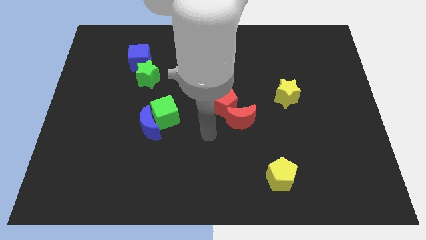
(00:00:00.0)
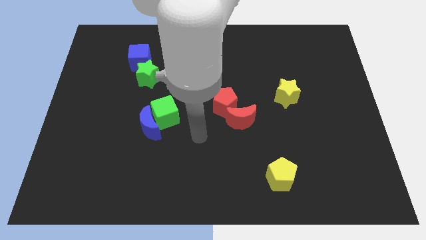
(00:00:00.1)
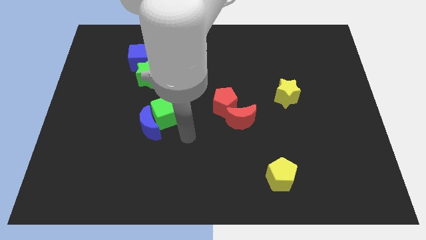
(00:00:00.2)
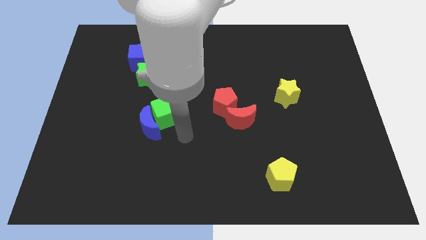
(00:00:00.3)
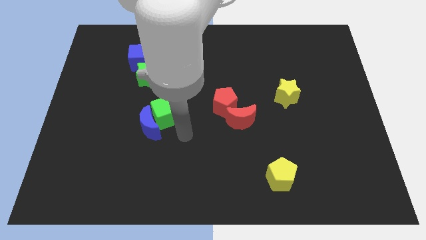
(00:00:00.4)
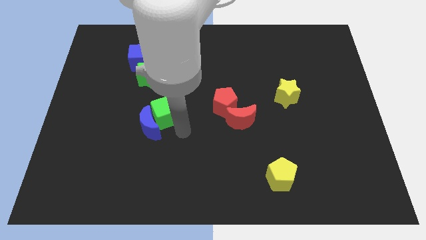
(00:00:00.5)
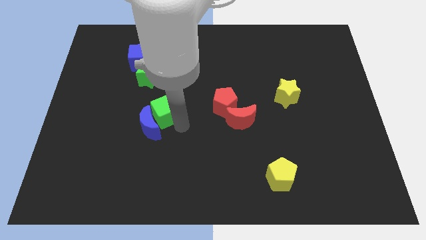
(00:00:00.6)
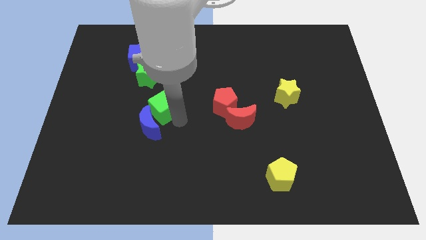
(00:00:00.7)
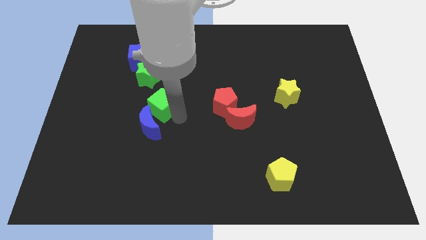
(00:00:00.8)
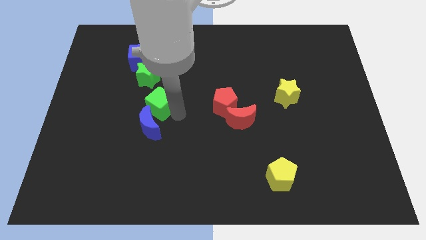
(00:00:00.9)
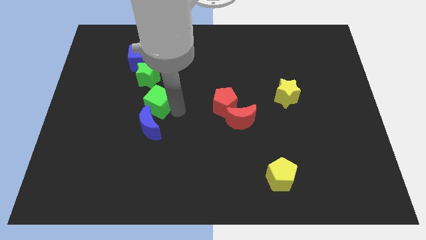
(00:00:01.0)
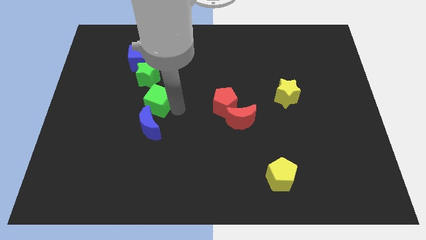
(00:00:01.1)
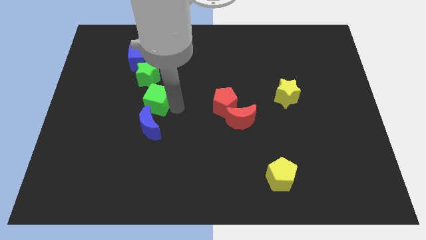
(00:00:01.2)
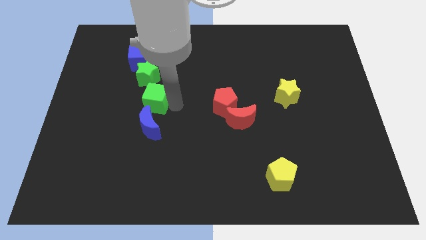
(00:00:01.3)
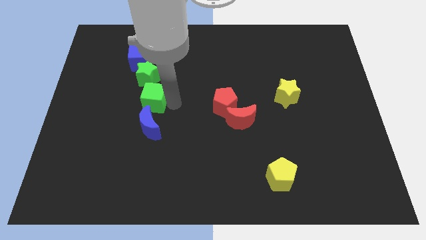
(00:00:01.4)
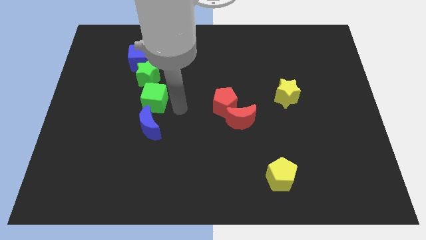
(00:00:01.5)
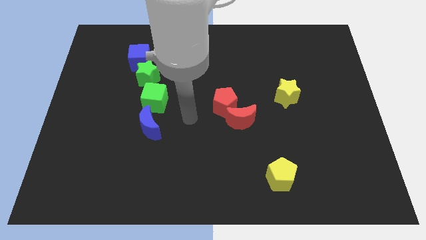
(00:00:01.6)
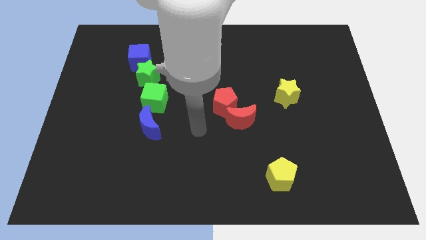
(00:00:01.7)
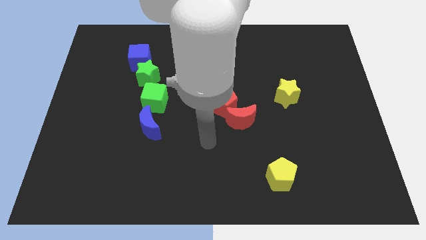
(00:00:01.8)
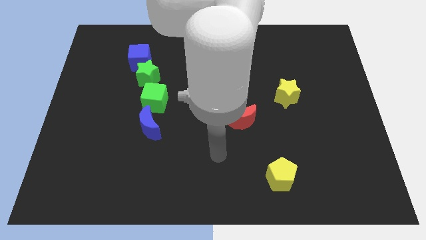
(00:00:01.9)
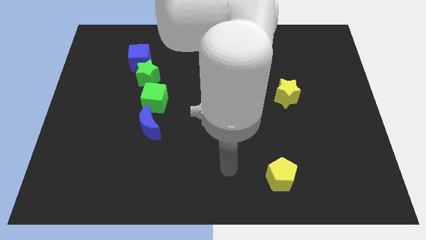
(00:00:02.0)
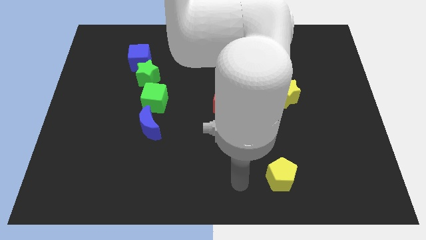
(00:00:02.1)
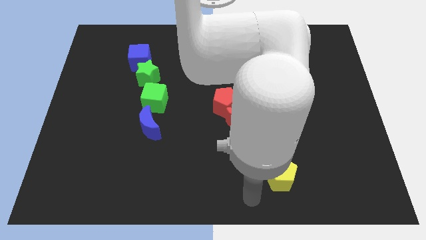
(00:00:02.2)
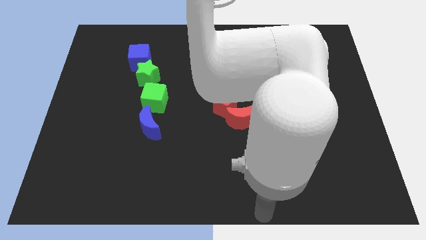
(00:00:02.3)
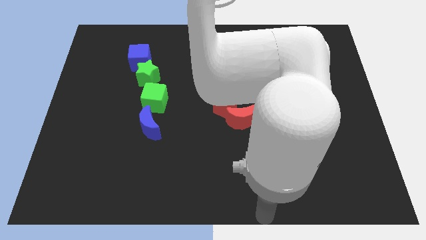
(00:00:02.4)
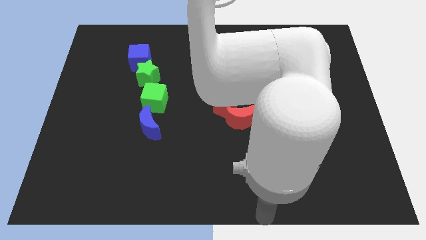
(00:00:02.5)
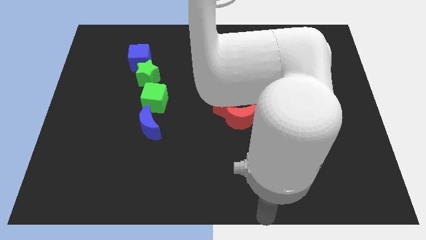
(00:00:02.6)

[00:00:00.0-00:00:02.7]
place the green cube at the bottom of green star and move away

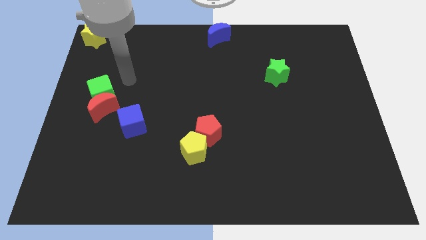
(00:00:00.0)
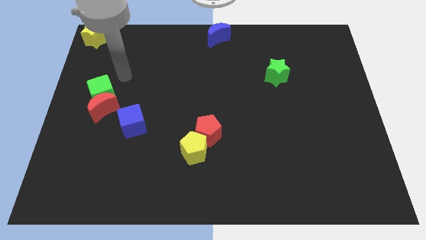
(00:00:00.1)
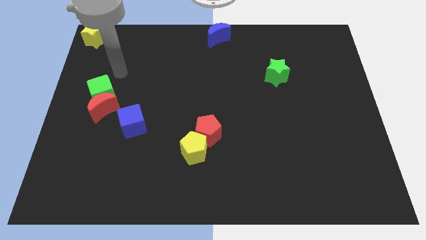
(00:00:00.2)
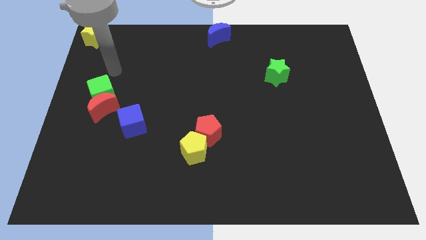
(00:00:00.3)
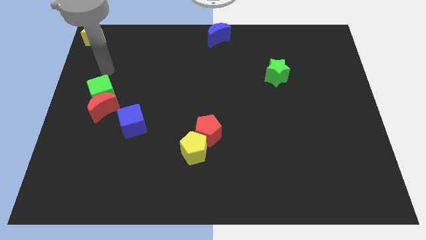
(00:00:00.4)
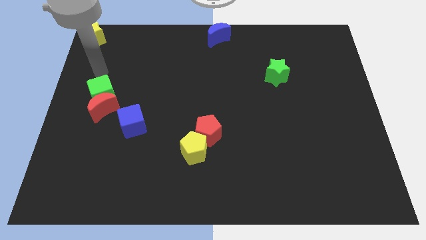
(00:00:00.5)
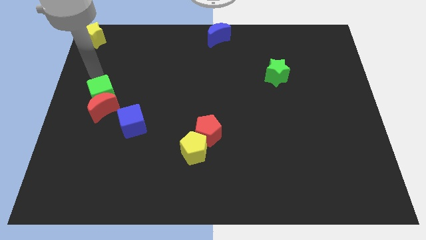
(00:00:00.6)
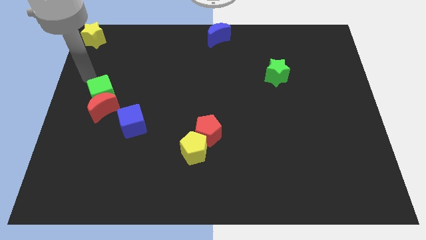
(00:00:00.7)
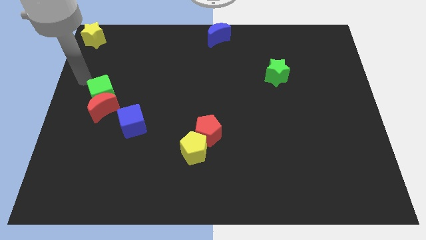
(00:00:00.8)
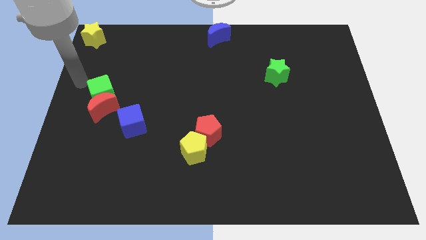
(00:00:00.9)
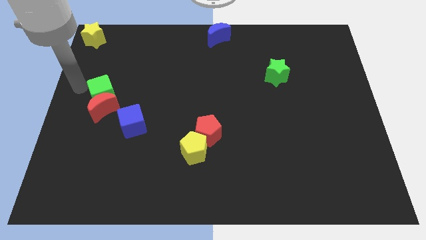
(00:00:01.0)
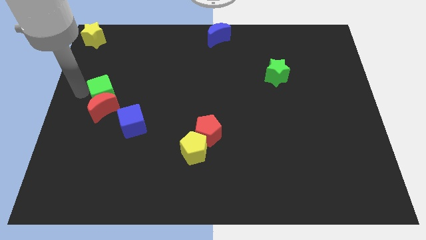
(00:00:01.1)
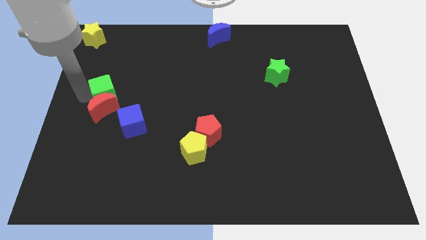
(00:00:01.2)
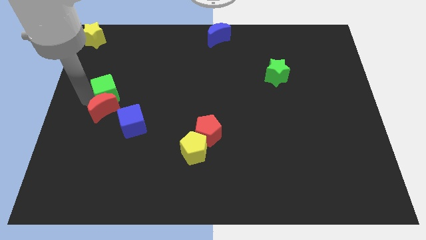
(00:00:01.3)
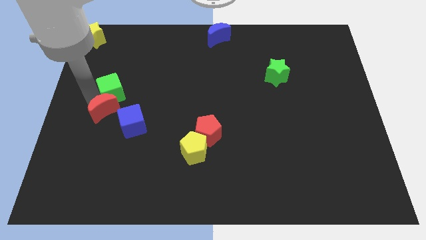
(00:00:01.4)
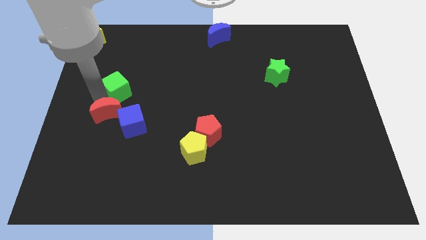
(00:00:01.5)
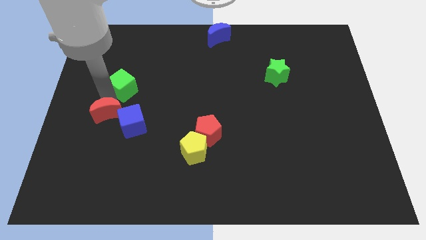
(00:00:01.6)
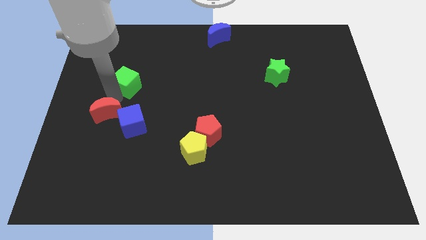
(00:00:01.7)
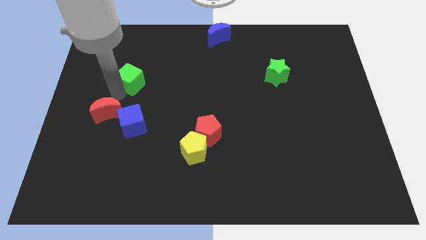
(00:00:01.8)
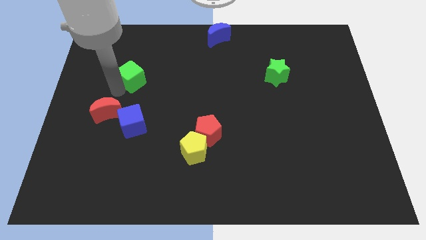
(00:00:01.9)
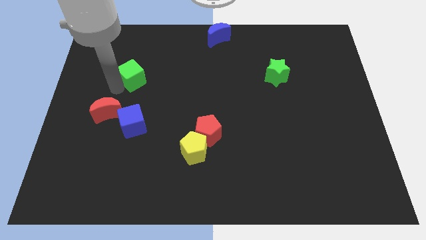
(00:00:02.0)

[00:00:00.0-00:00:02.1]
separate the red crescent and green cube

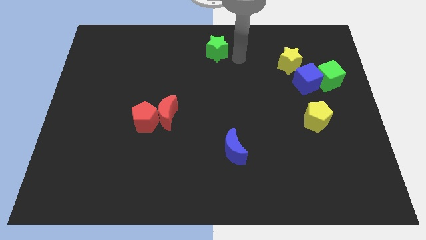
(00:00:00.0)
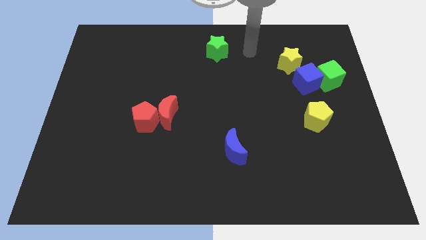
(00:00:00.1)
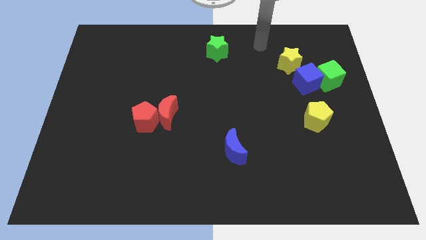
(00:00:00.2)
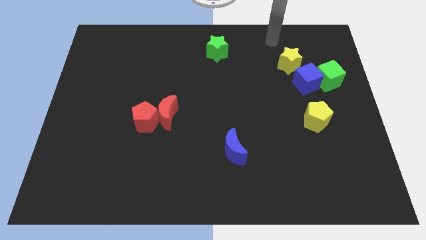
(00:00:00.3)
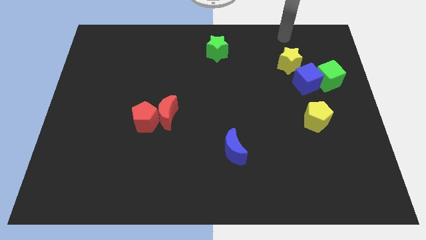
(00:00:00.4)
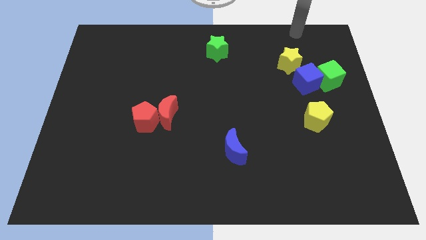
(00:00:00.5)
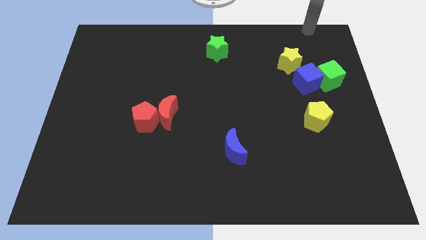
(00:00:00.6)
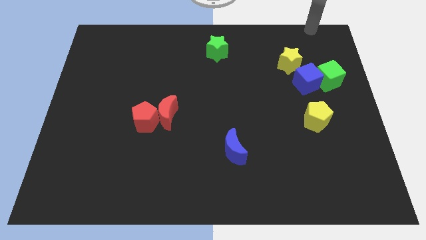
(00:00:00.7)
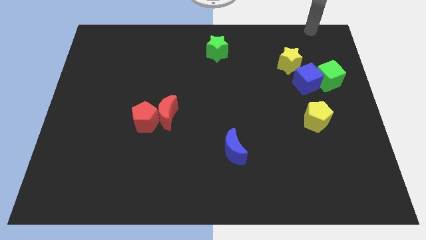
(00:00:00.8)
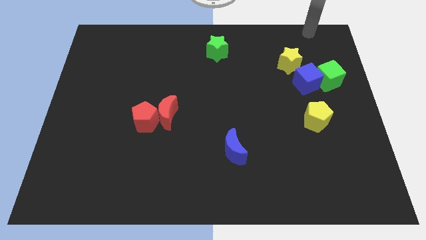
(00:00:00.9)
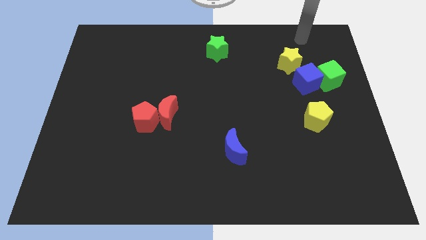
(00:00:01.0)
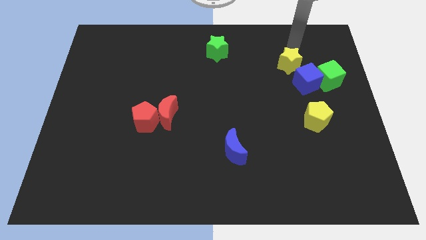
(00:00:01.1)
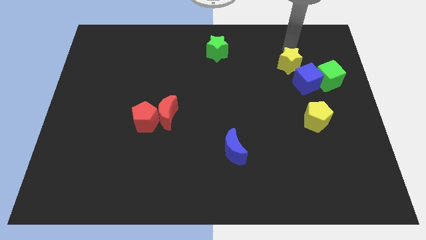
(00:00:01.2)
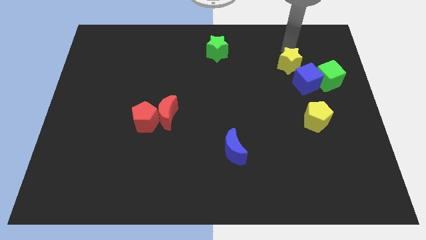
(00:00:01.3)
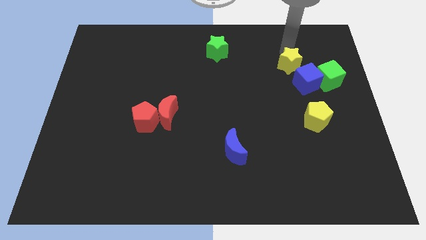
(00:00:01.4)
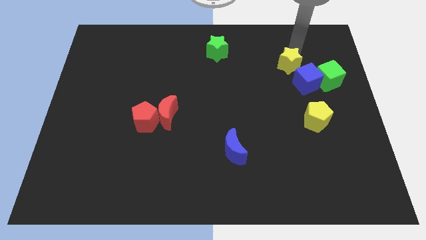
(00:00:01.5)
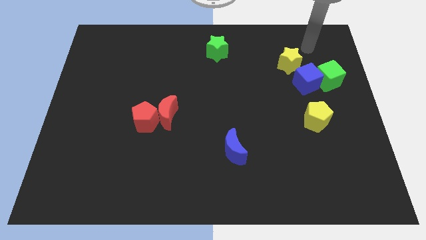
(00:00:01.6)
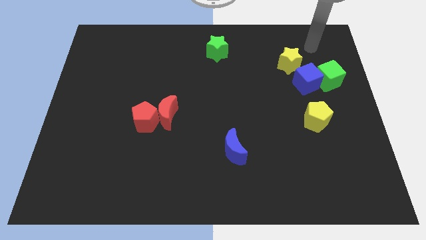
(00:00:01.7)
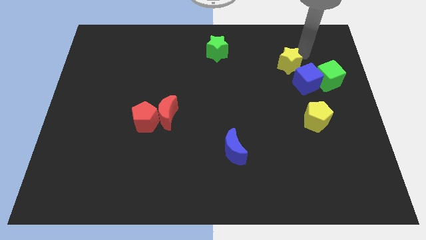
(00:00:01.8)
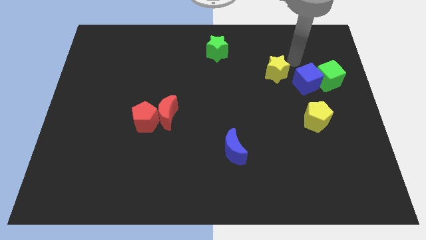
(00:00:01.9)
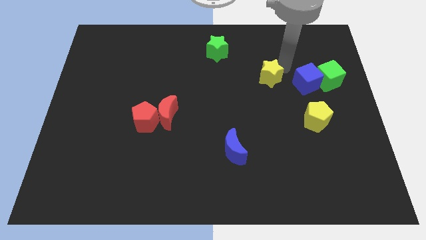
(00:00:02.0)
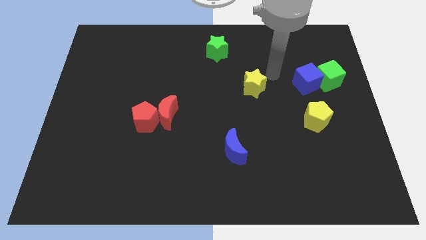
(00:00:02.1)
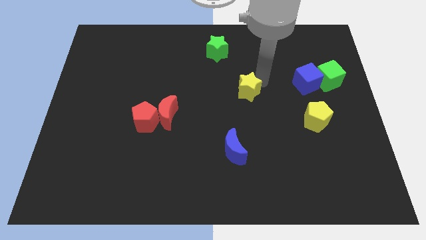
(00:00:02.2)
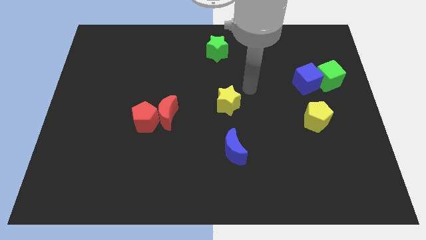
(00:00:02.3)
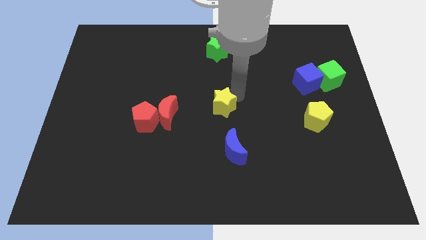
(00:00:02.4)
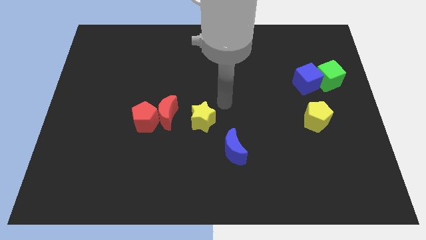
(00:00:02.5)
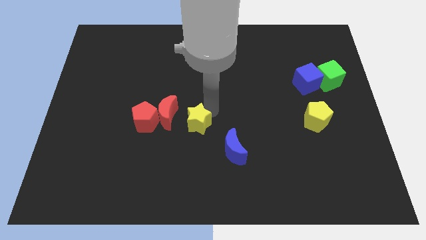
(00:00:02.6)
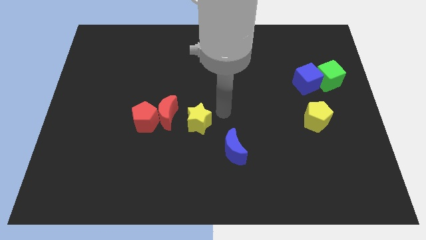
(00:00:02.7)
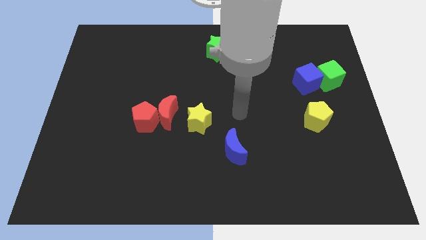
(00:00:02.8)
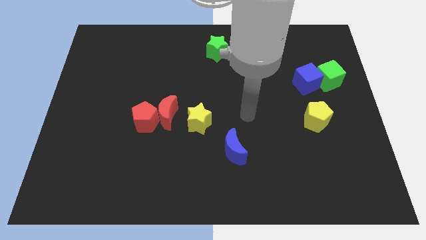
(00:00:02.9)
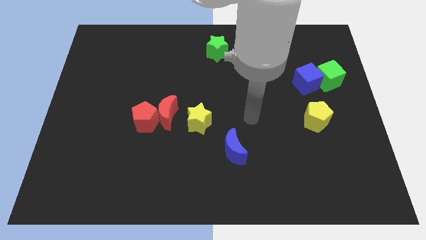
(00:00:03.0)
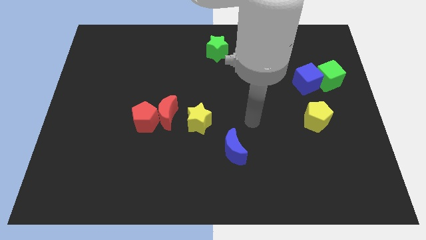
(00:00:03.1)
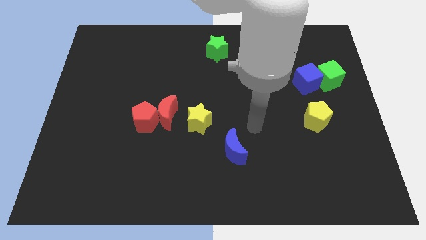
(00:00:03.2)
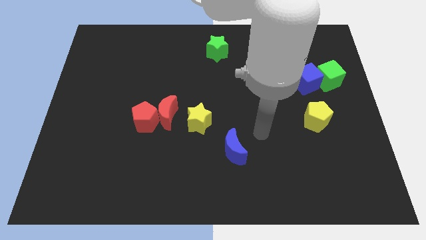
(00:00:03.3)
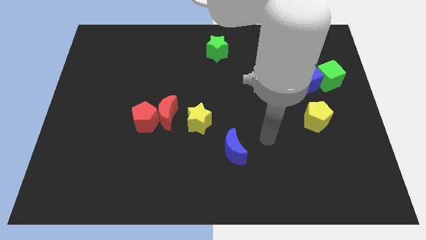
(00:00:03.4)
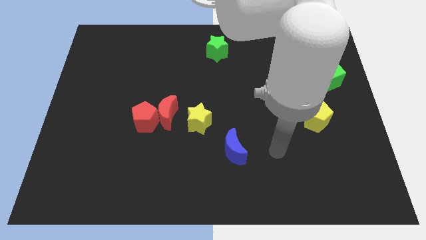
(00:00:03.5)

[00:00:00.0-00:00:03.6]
push the yellow star to the right of the red crescent

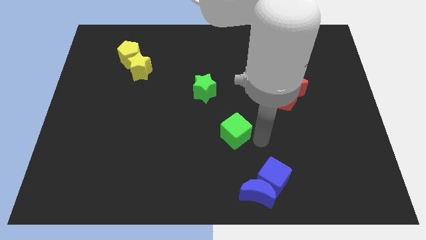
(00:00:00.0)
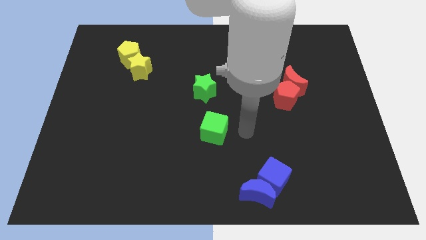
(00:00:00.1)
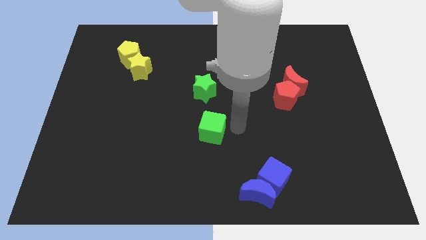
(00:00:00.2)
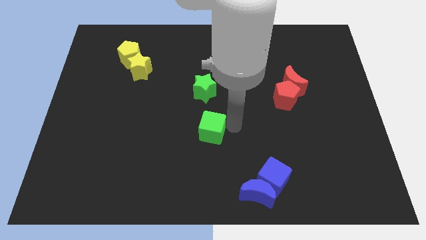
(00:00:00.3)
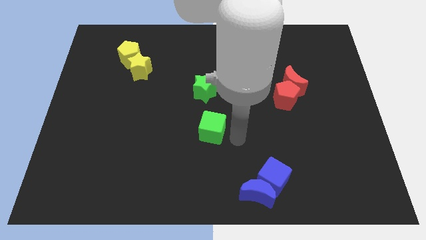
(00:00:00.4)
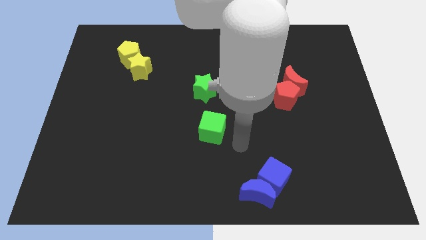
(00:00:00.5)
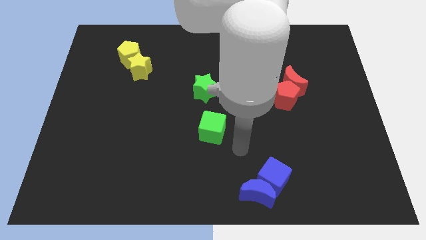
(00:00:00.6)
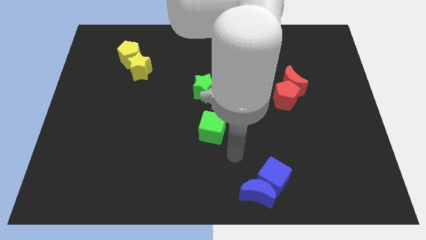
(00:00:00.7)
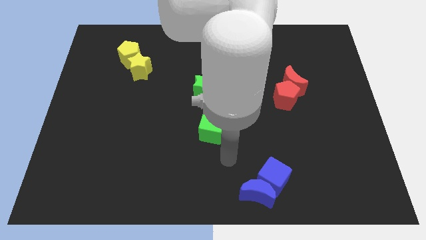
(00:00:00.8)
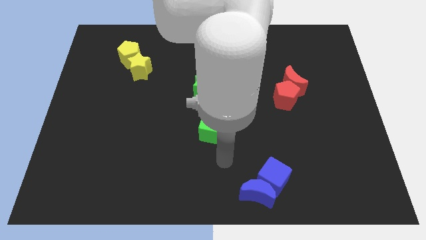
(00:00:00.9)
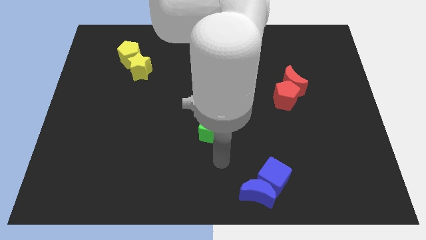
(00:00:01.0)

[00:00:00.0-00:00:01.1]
place the green cube below the green star
